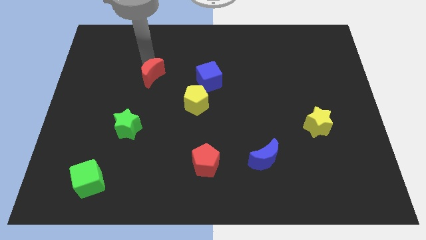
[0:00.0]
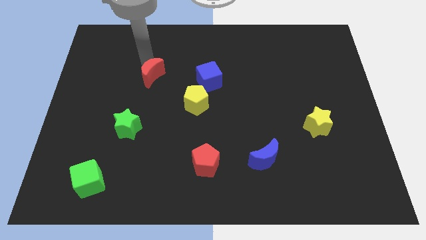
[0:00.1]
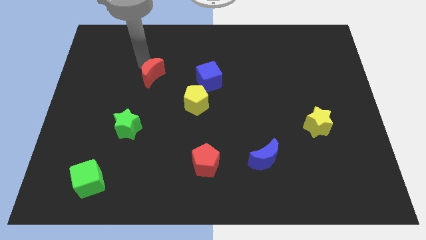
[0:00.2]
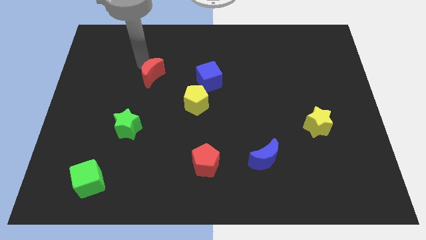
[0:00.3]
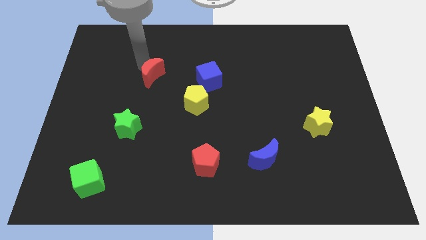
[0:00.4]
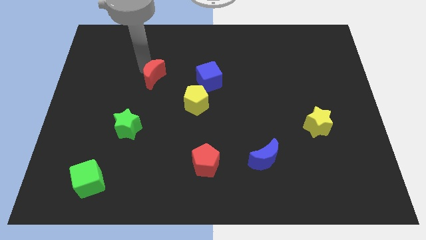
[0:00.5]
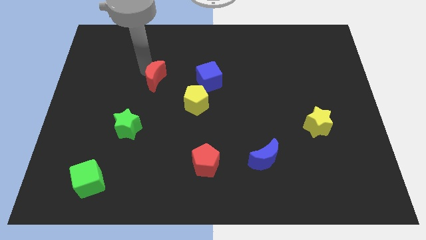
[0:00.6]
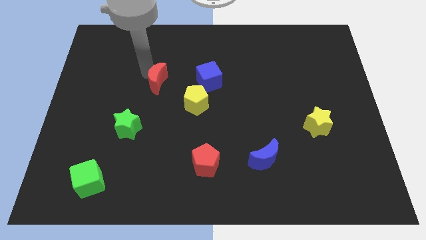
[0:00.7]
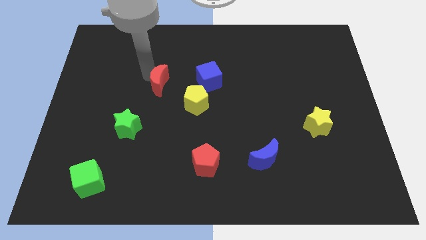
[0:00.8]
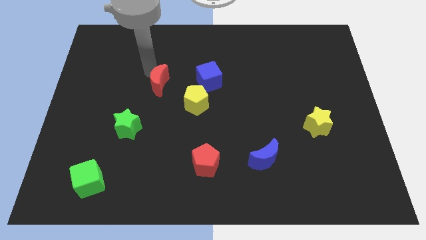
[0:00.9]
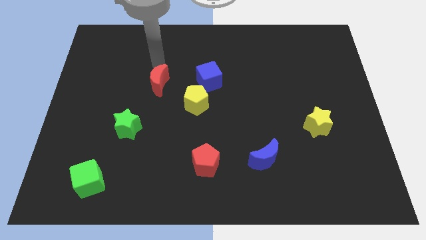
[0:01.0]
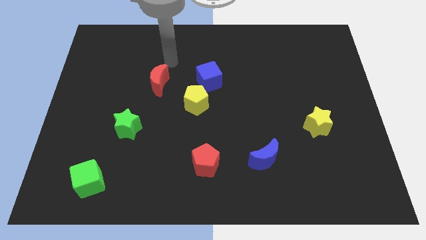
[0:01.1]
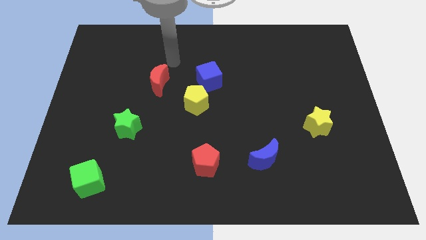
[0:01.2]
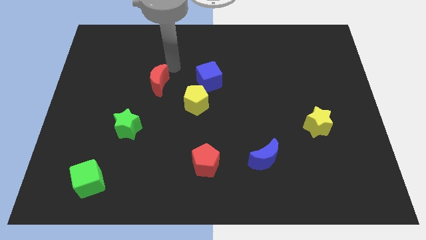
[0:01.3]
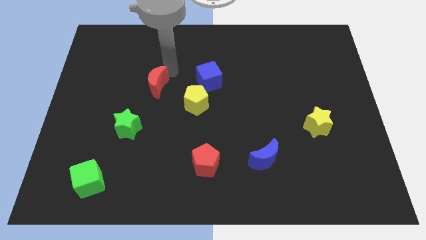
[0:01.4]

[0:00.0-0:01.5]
place the red moon left to the blue cube

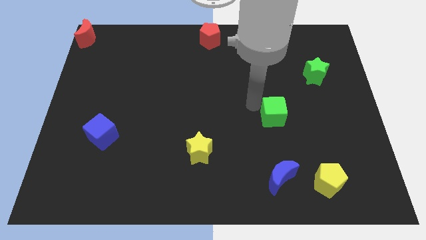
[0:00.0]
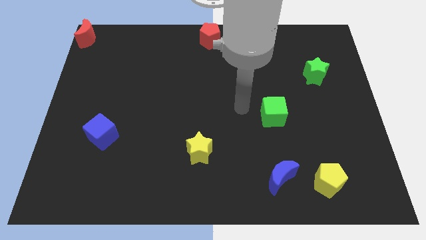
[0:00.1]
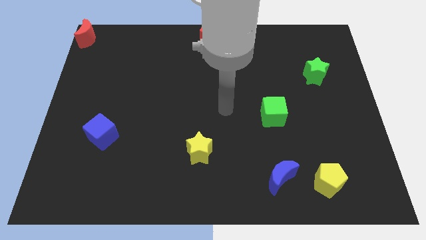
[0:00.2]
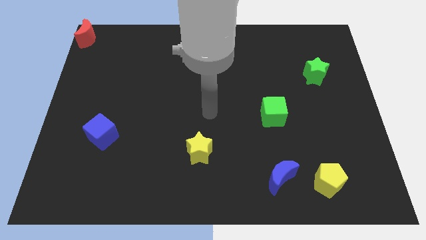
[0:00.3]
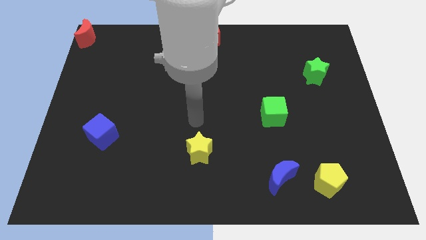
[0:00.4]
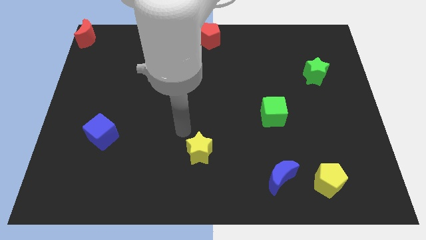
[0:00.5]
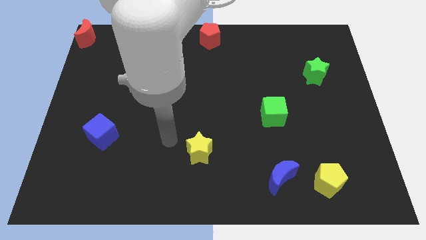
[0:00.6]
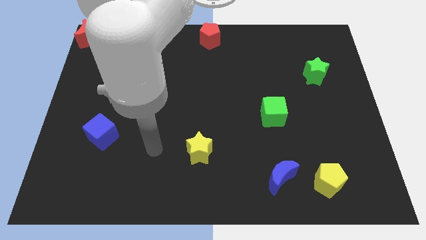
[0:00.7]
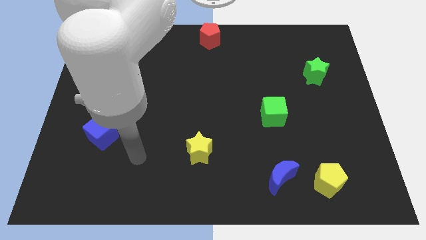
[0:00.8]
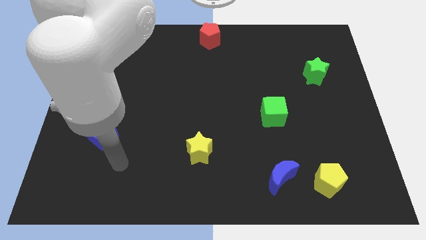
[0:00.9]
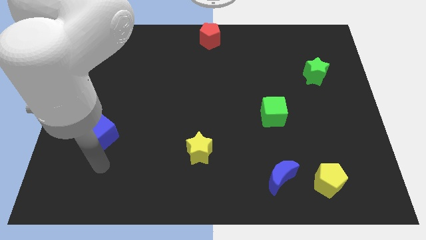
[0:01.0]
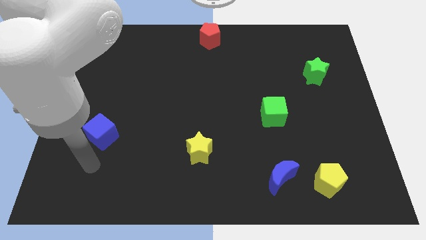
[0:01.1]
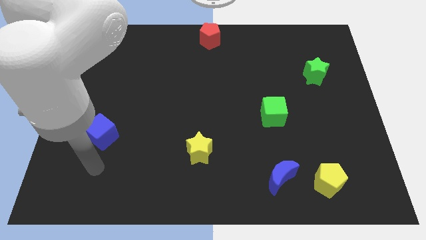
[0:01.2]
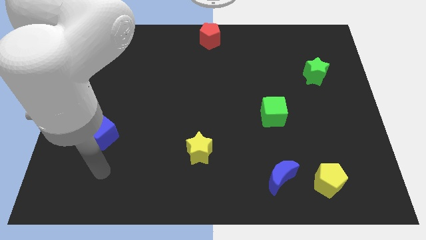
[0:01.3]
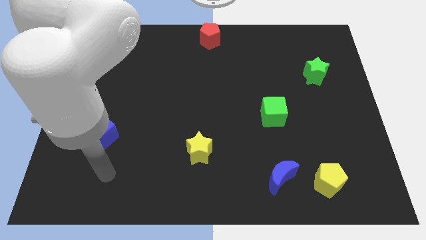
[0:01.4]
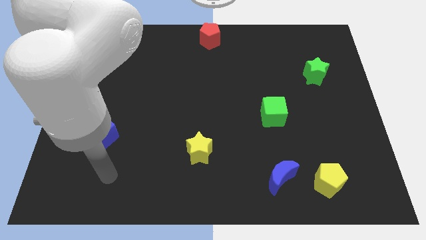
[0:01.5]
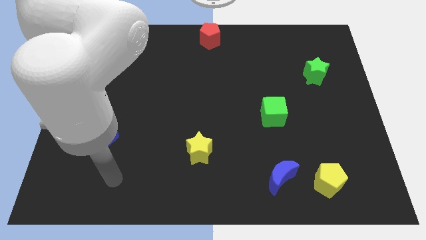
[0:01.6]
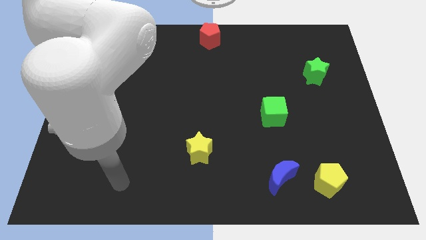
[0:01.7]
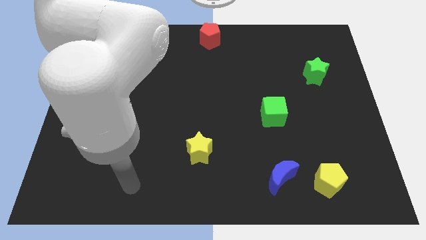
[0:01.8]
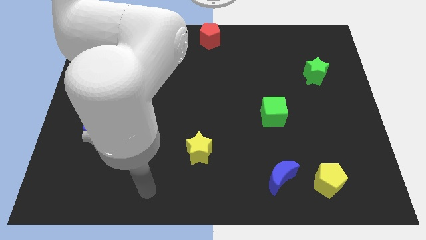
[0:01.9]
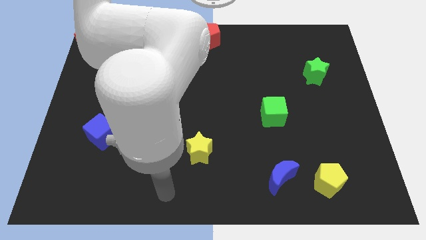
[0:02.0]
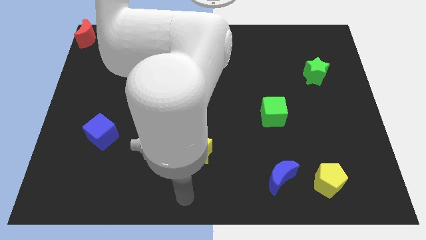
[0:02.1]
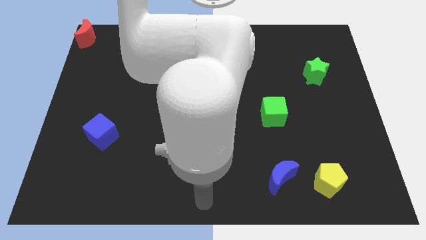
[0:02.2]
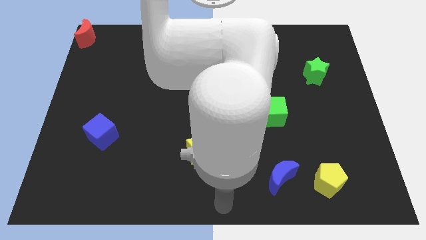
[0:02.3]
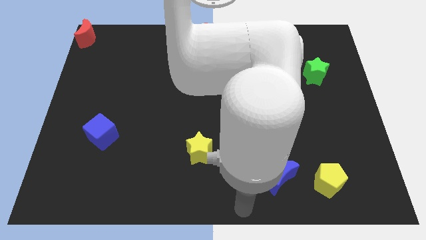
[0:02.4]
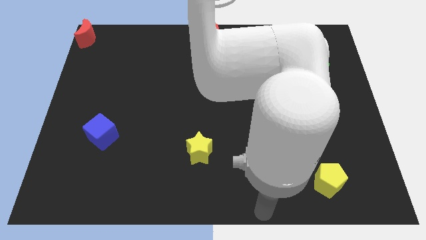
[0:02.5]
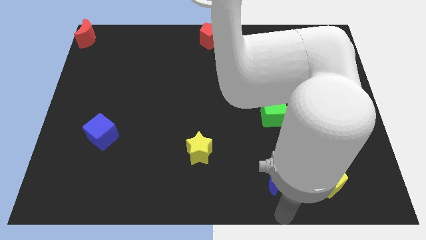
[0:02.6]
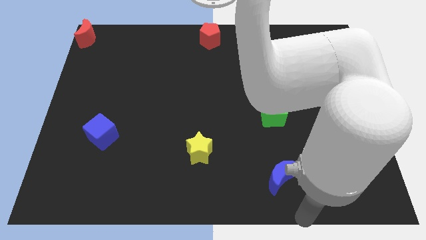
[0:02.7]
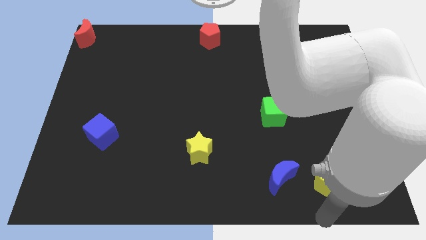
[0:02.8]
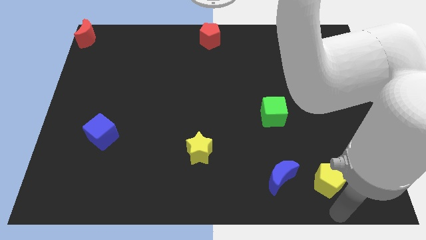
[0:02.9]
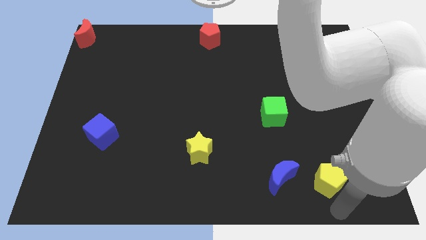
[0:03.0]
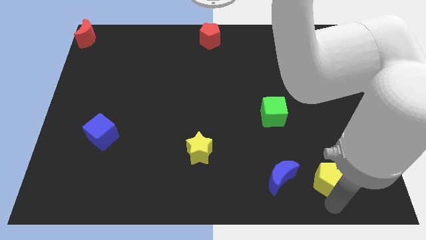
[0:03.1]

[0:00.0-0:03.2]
move the arm away from the green cube

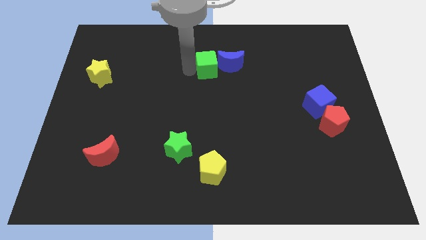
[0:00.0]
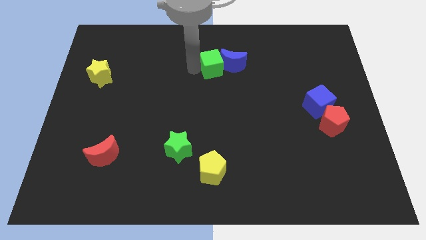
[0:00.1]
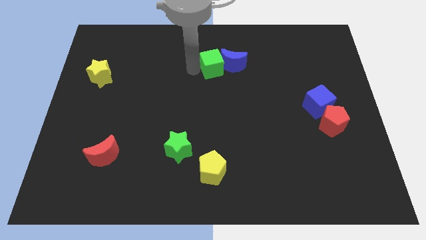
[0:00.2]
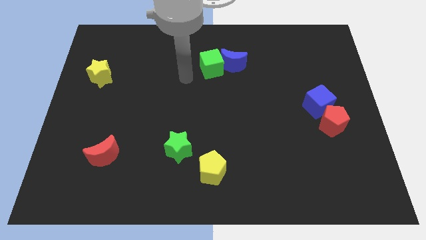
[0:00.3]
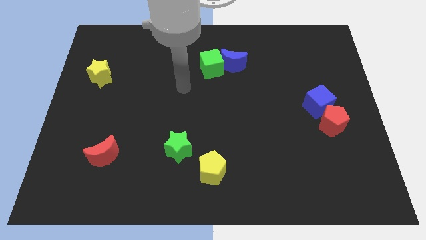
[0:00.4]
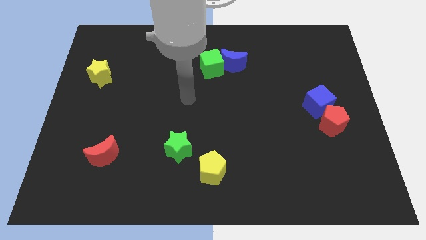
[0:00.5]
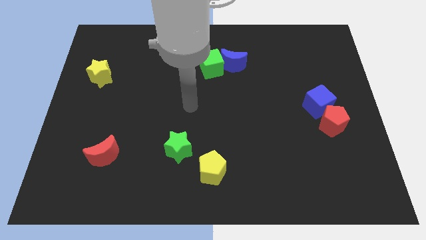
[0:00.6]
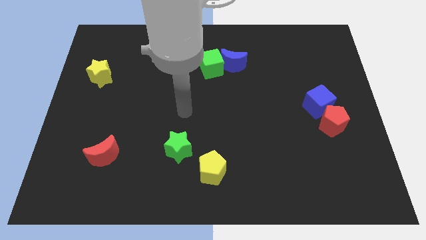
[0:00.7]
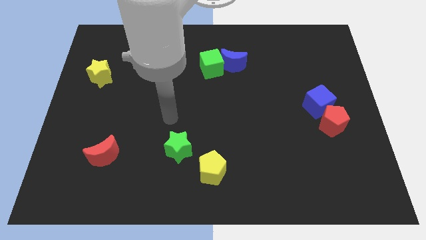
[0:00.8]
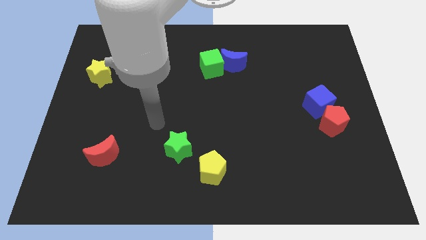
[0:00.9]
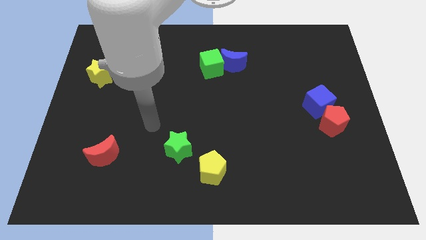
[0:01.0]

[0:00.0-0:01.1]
move your arm away from the green cube

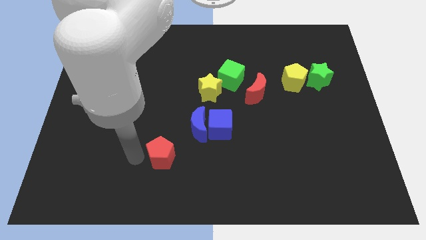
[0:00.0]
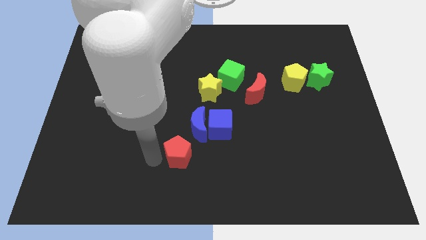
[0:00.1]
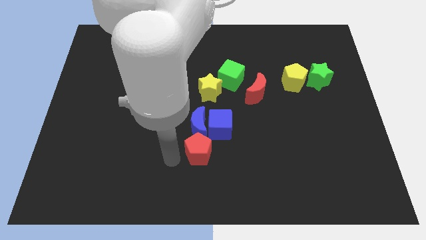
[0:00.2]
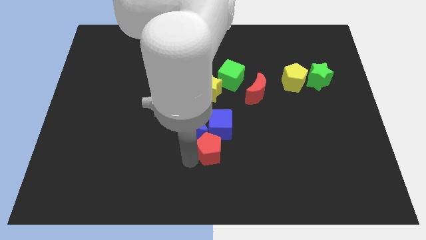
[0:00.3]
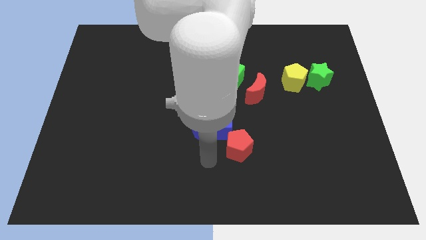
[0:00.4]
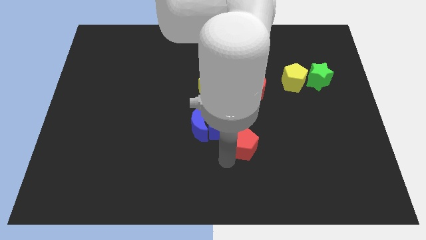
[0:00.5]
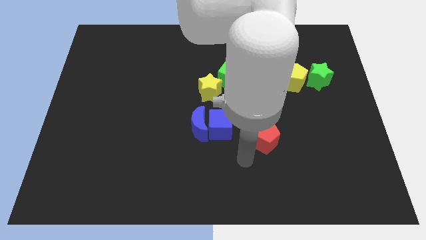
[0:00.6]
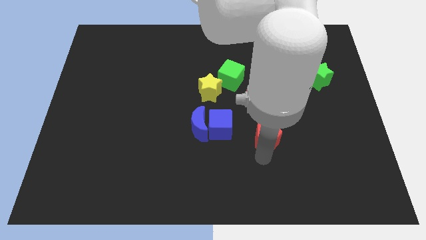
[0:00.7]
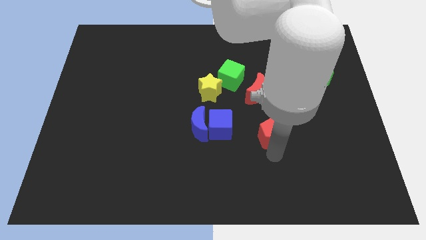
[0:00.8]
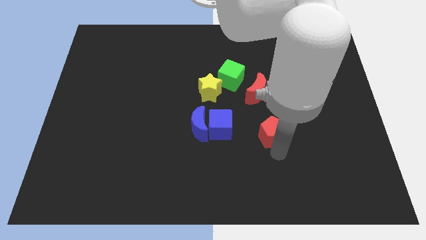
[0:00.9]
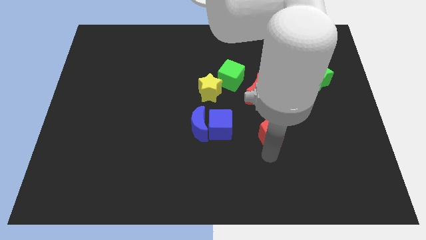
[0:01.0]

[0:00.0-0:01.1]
place the red pentagon diagonal to the yellow star

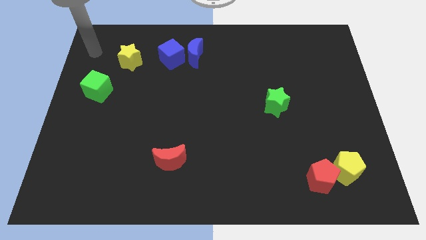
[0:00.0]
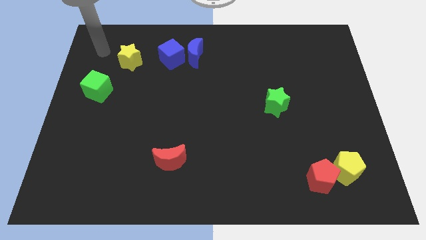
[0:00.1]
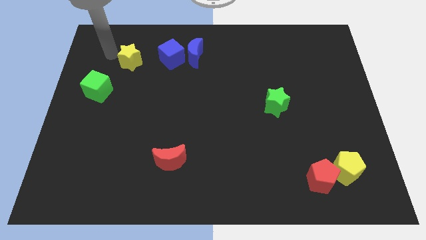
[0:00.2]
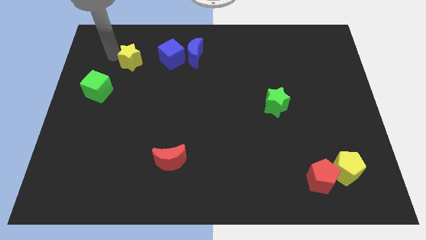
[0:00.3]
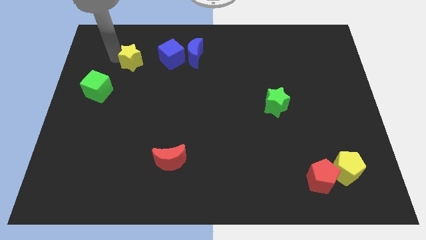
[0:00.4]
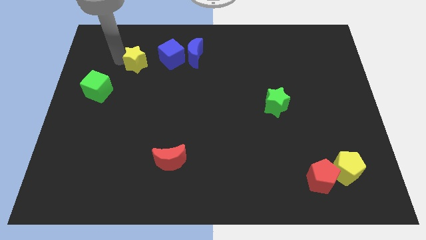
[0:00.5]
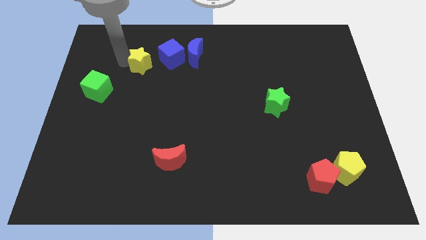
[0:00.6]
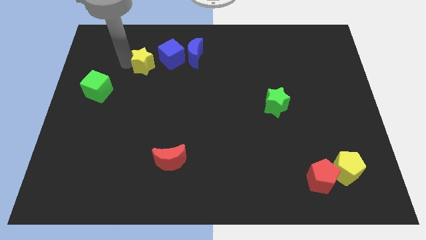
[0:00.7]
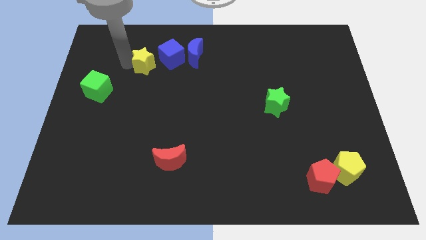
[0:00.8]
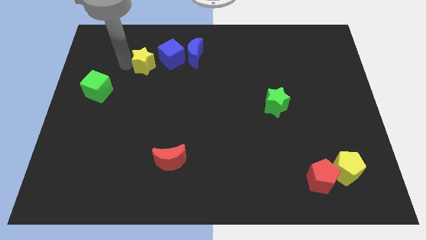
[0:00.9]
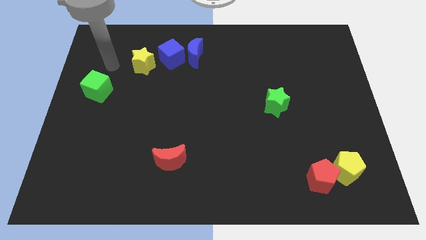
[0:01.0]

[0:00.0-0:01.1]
move the yellow star near to the blue cube

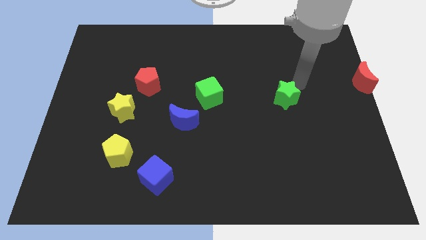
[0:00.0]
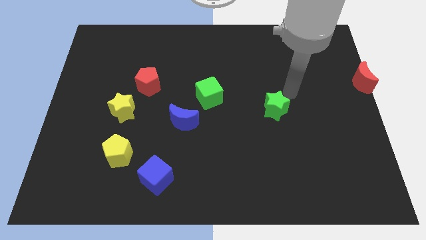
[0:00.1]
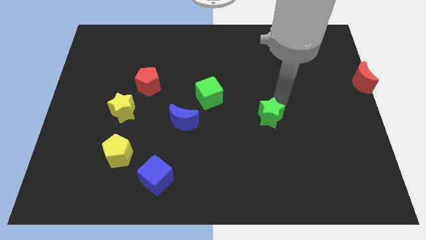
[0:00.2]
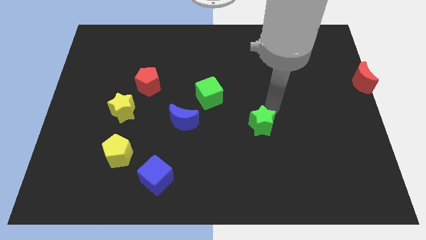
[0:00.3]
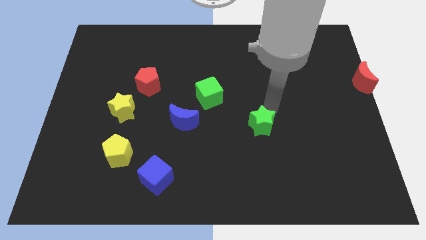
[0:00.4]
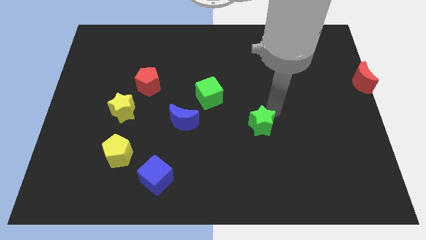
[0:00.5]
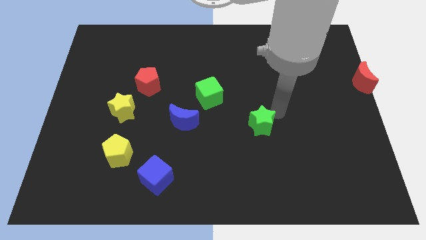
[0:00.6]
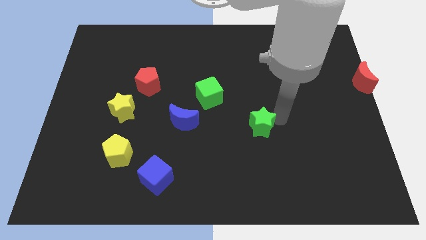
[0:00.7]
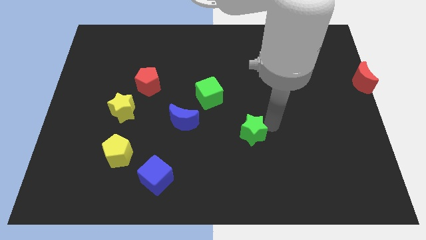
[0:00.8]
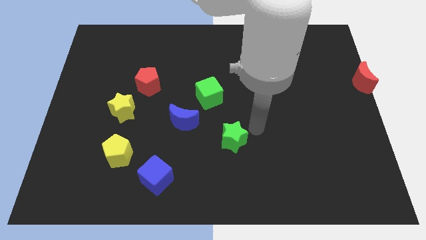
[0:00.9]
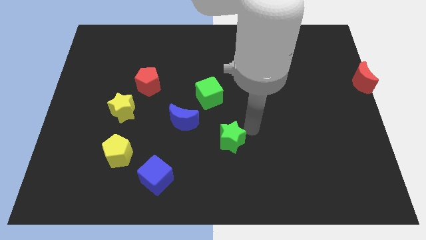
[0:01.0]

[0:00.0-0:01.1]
move green star diagonally below the green cube

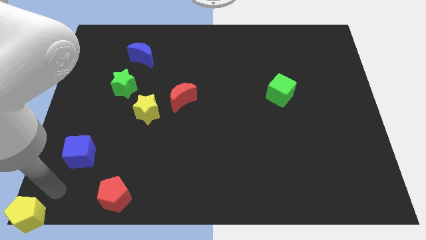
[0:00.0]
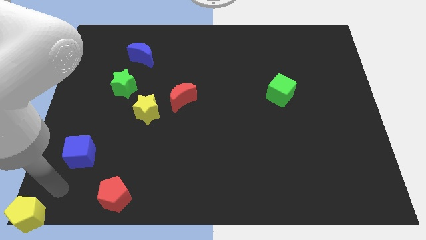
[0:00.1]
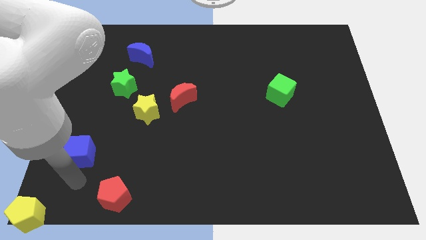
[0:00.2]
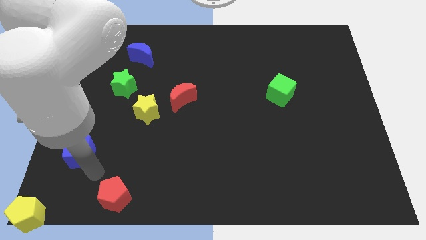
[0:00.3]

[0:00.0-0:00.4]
place arm in between the red pentagon and blue cube
